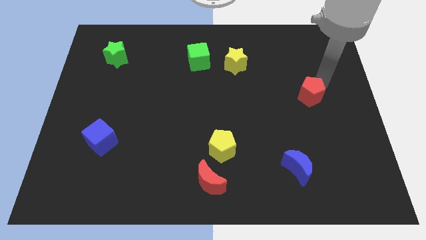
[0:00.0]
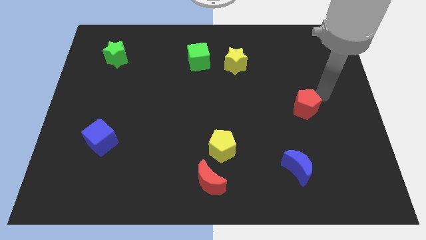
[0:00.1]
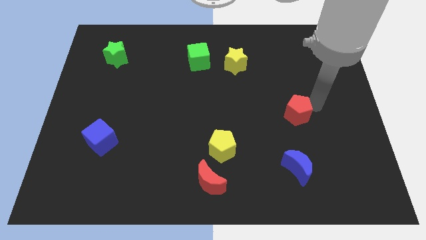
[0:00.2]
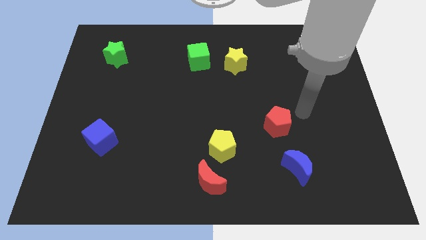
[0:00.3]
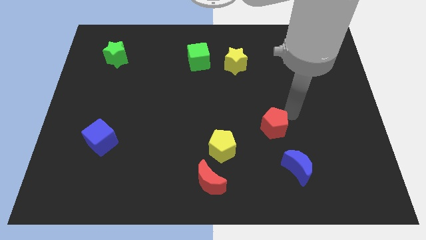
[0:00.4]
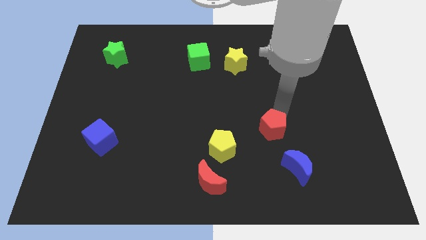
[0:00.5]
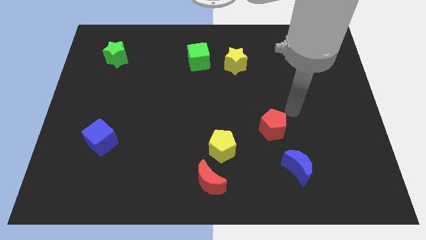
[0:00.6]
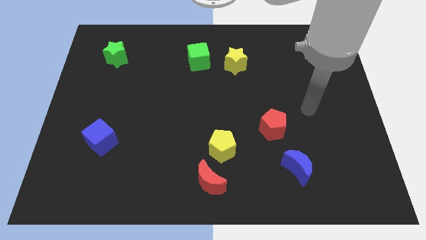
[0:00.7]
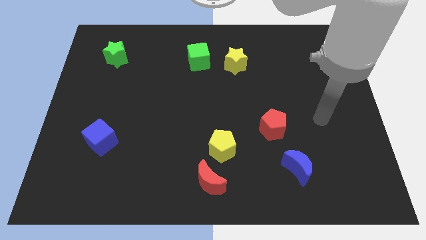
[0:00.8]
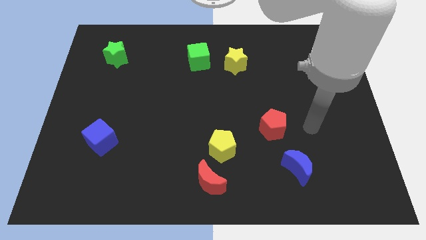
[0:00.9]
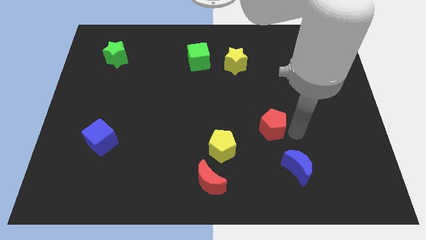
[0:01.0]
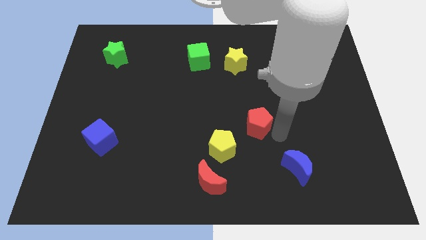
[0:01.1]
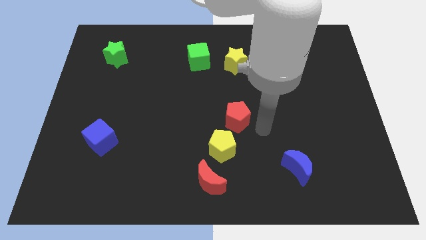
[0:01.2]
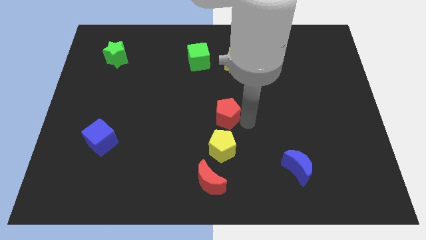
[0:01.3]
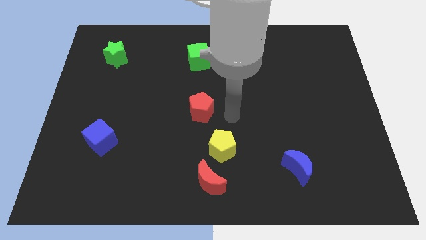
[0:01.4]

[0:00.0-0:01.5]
move the red pentagon to the top left side of the yellow pentagon

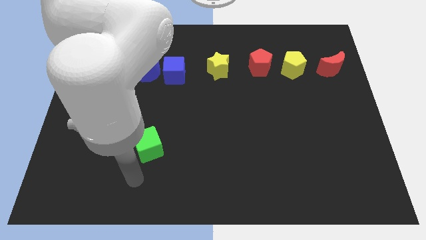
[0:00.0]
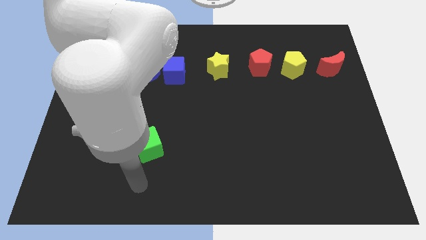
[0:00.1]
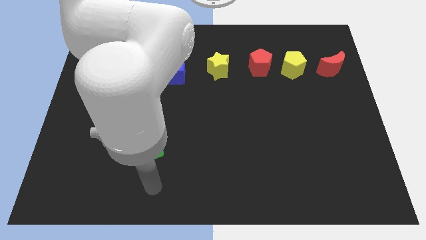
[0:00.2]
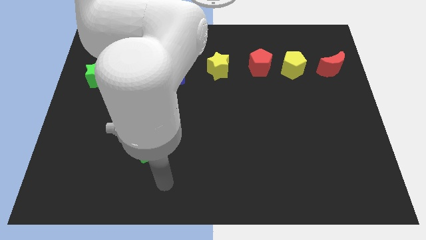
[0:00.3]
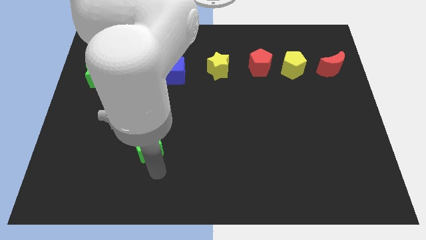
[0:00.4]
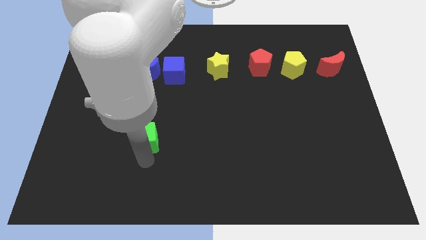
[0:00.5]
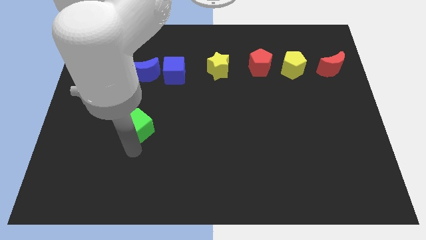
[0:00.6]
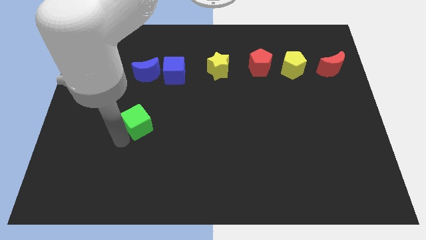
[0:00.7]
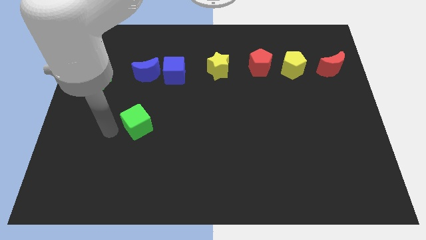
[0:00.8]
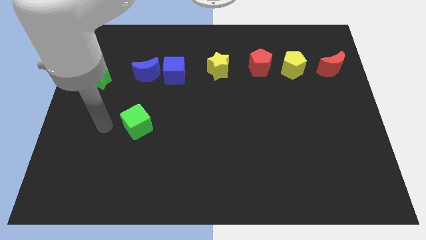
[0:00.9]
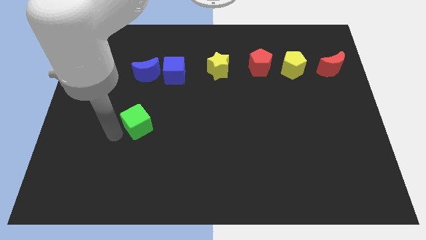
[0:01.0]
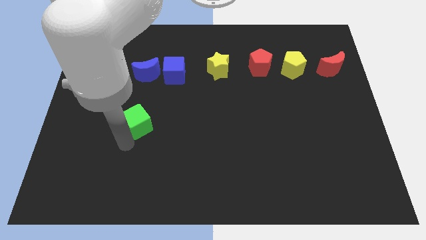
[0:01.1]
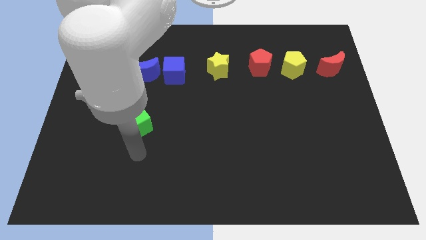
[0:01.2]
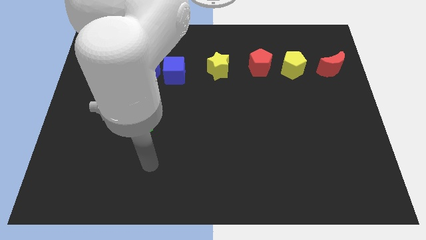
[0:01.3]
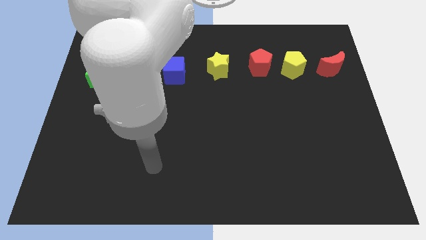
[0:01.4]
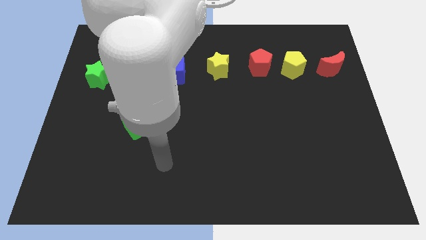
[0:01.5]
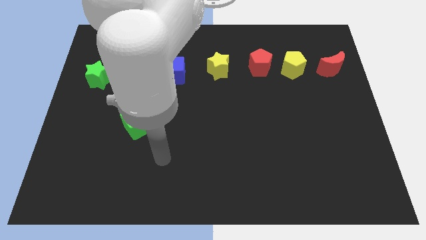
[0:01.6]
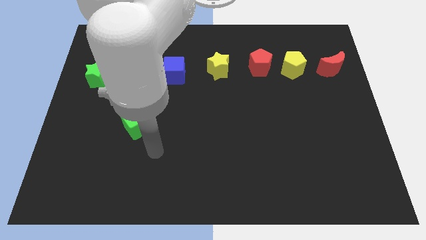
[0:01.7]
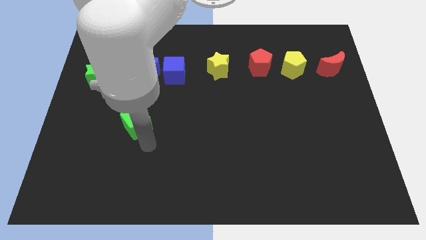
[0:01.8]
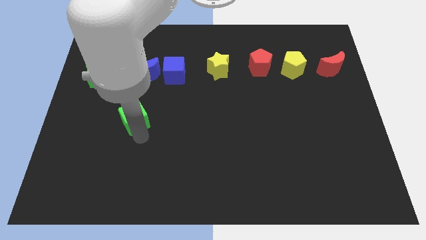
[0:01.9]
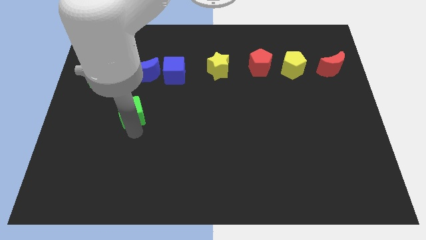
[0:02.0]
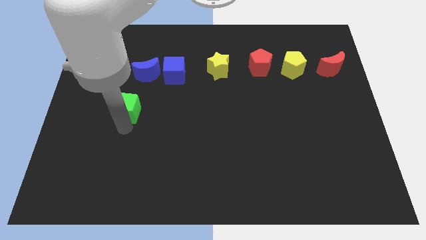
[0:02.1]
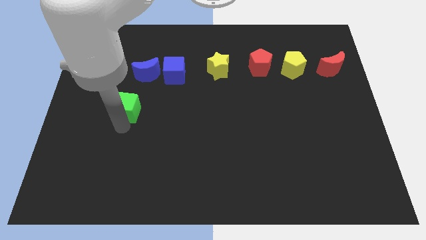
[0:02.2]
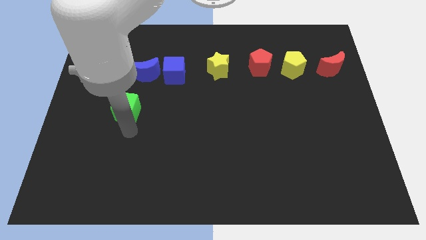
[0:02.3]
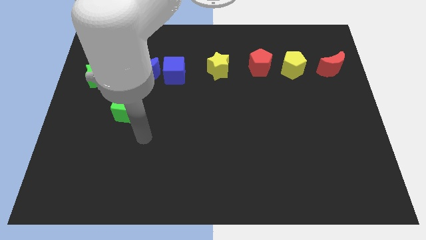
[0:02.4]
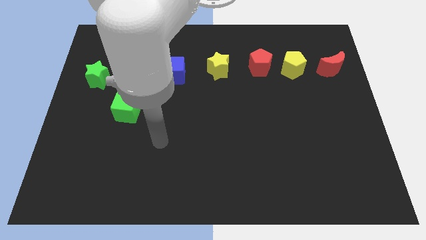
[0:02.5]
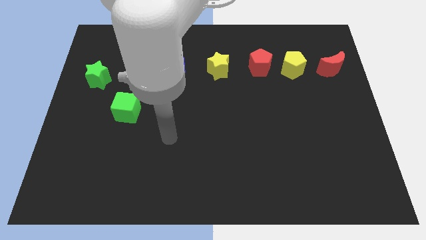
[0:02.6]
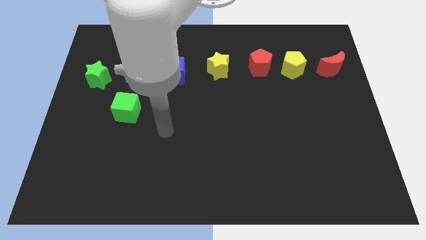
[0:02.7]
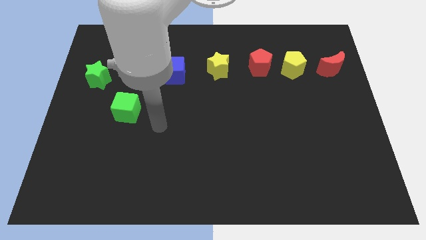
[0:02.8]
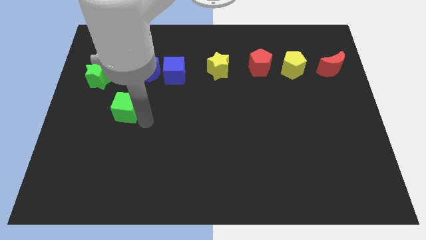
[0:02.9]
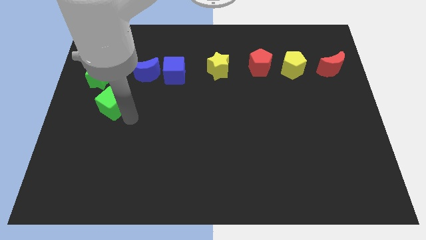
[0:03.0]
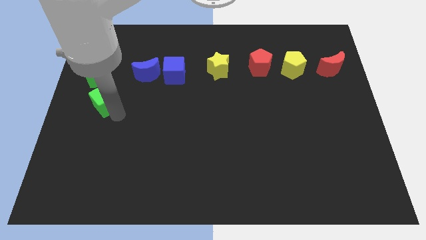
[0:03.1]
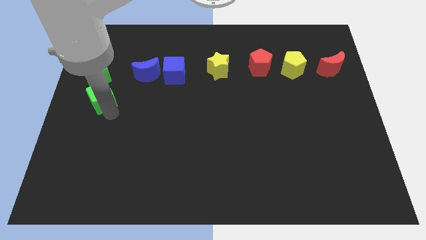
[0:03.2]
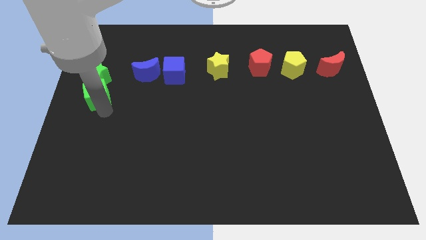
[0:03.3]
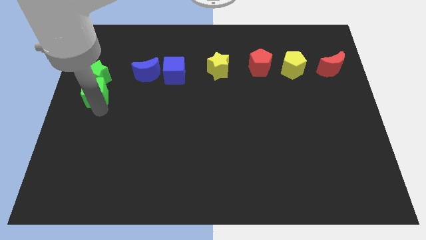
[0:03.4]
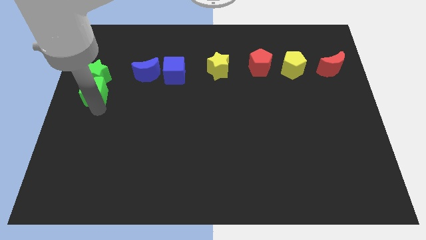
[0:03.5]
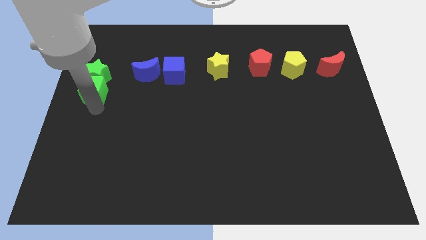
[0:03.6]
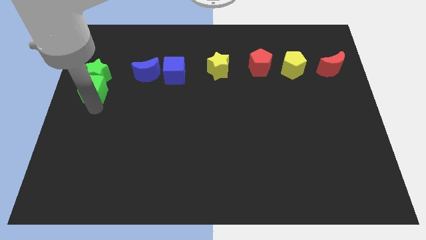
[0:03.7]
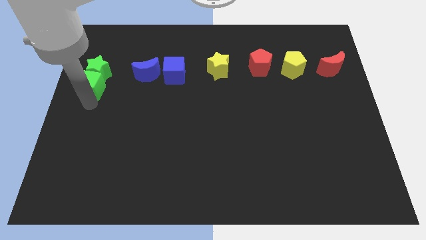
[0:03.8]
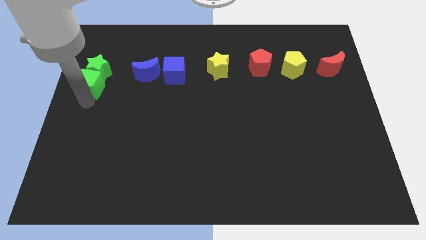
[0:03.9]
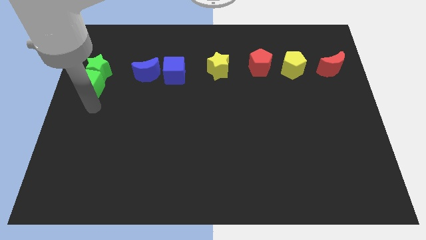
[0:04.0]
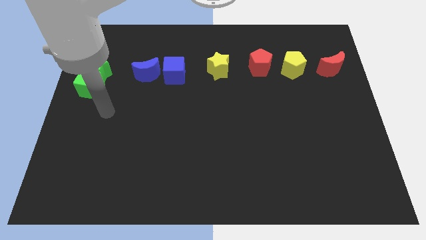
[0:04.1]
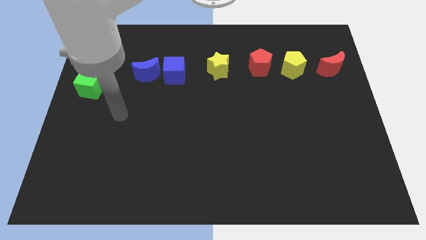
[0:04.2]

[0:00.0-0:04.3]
push the green cube to the bottom side of the green star

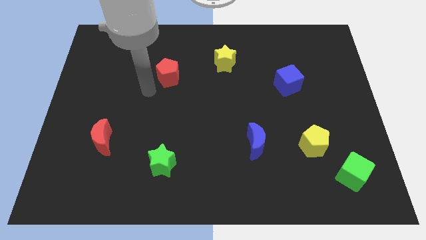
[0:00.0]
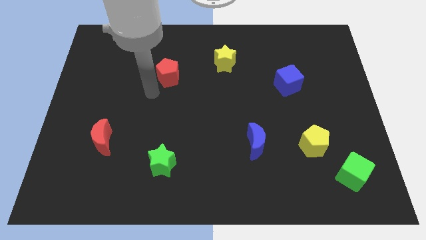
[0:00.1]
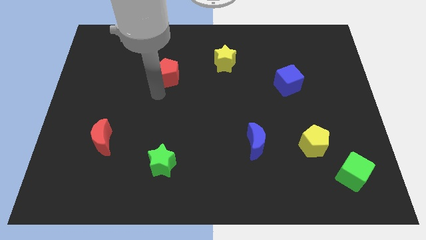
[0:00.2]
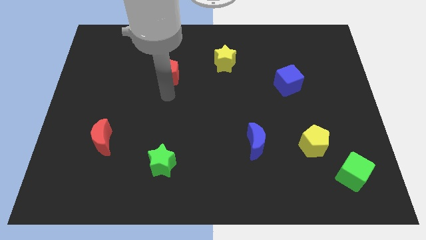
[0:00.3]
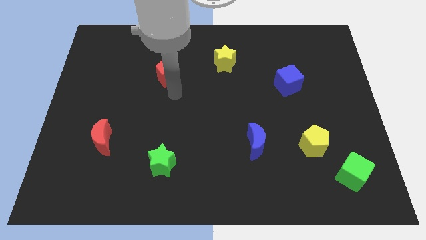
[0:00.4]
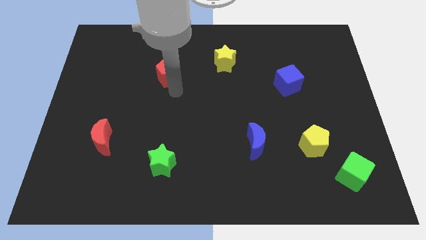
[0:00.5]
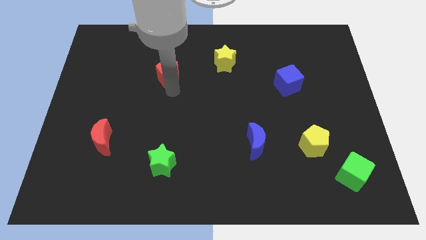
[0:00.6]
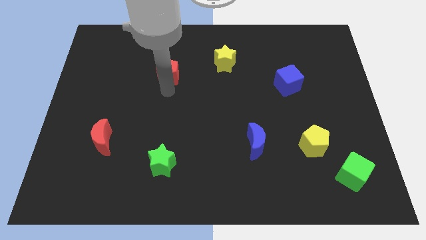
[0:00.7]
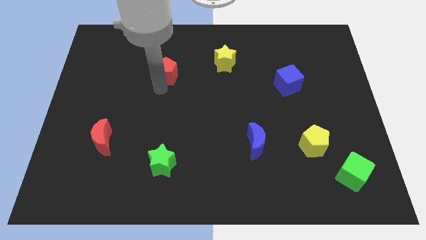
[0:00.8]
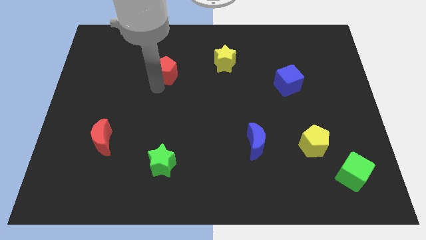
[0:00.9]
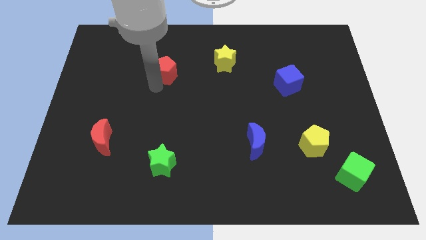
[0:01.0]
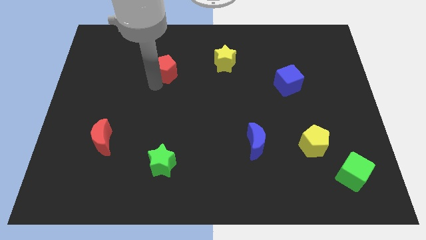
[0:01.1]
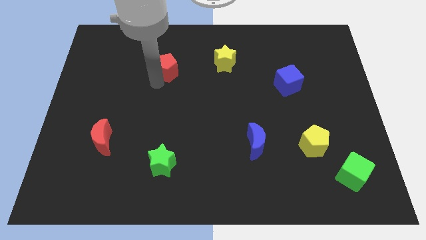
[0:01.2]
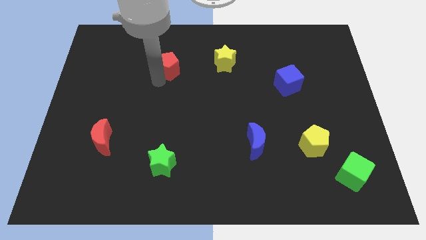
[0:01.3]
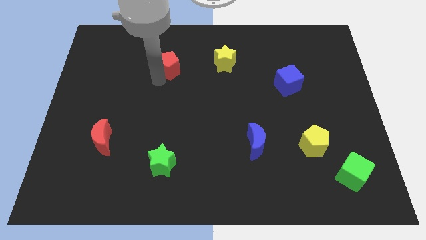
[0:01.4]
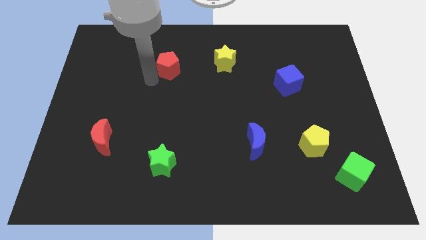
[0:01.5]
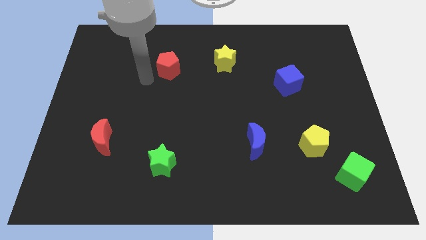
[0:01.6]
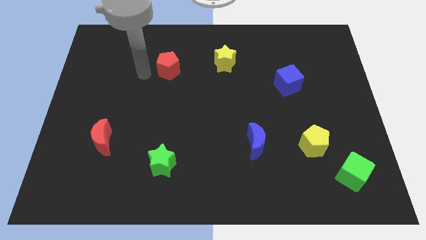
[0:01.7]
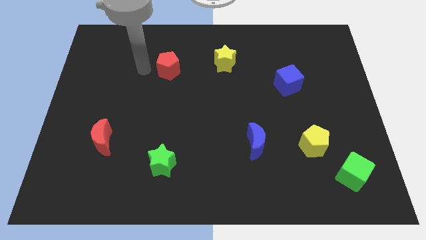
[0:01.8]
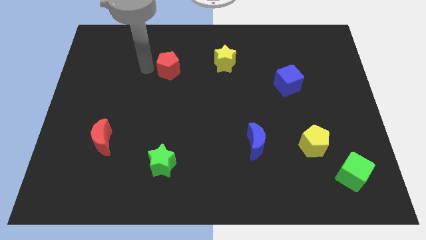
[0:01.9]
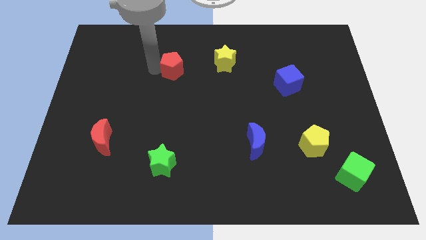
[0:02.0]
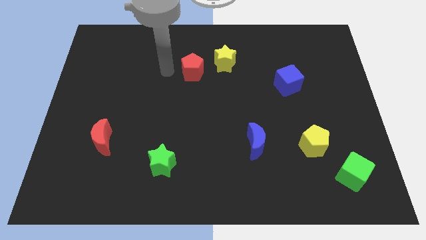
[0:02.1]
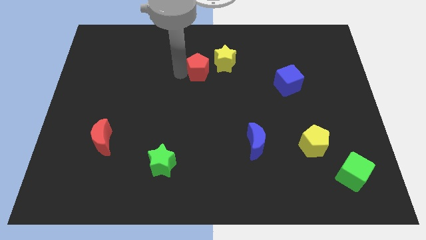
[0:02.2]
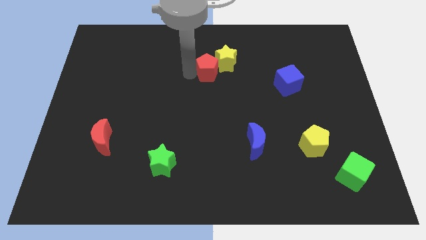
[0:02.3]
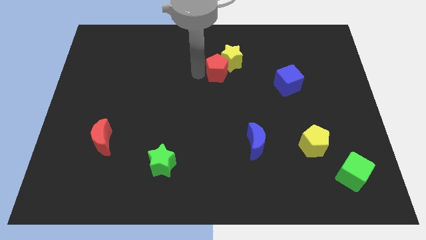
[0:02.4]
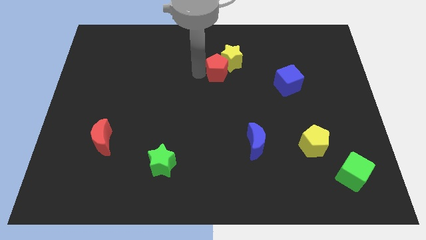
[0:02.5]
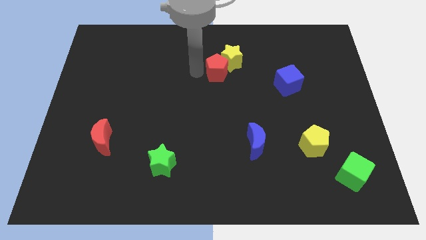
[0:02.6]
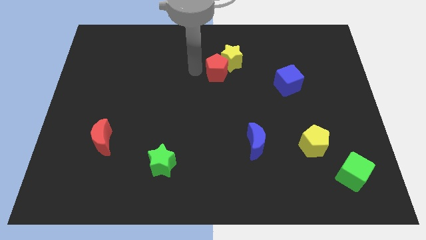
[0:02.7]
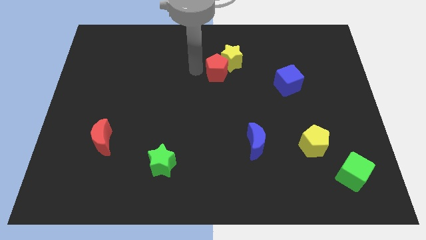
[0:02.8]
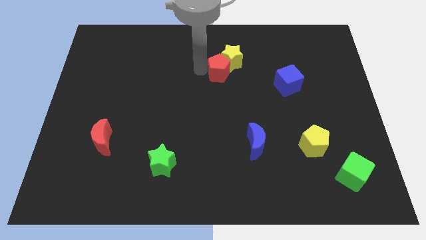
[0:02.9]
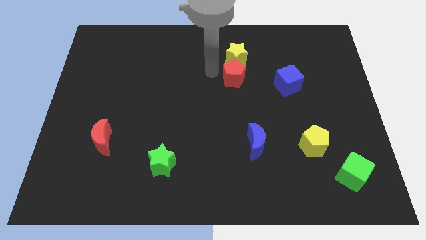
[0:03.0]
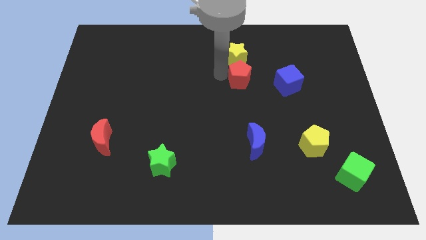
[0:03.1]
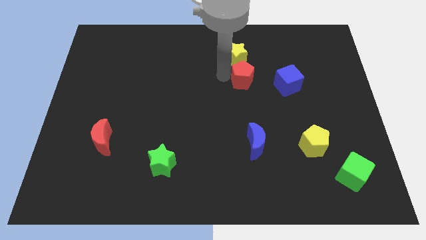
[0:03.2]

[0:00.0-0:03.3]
place the red pentagon below to the yellow star
